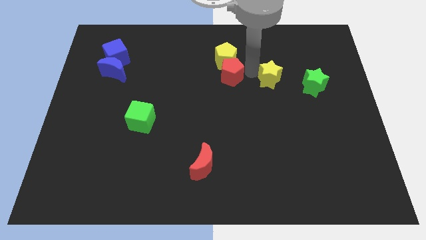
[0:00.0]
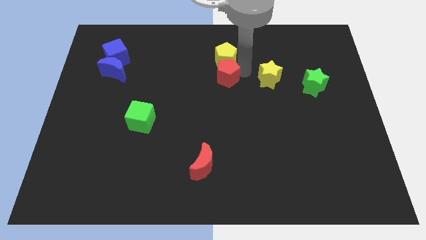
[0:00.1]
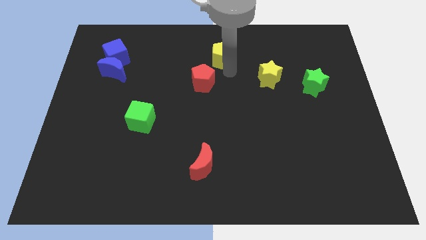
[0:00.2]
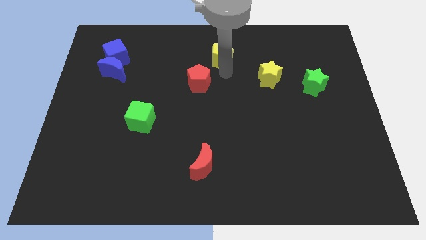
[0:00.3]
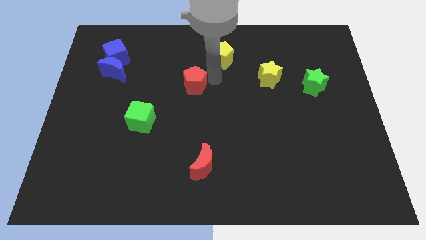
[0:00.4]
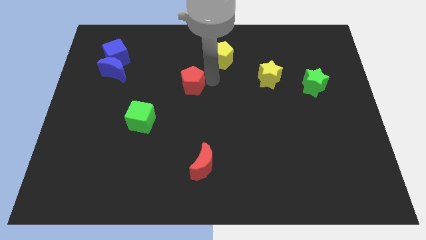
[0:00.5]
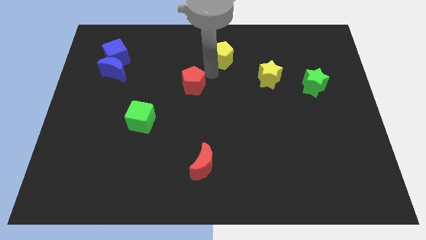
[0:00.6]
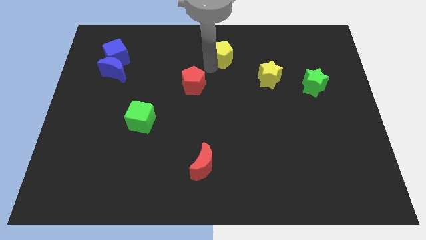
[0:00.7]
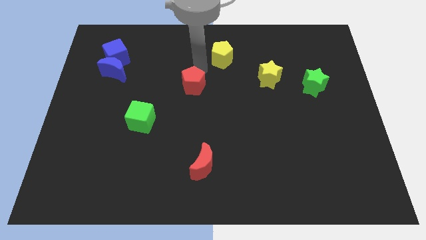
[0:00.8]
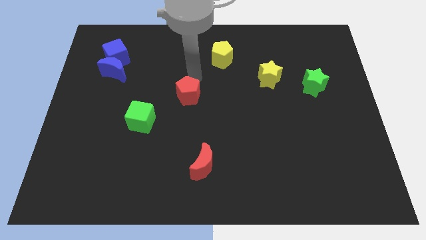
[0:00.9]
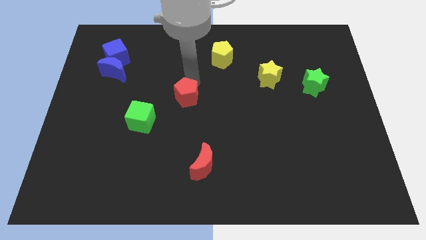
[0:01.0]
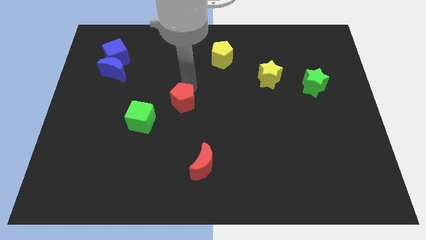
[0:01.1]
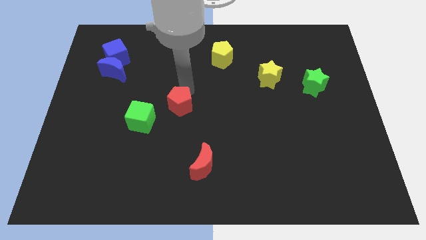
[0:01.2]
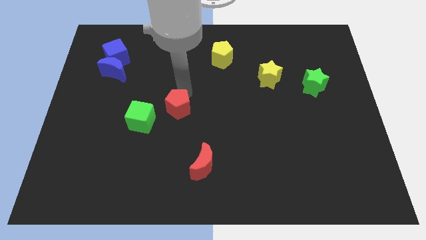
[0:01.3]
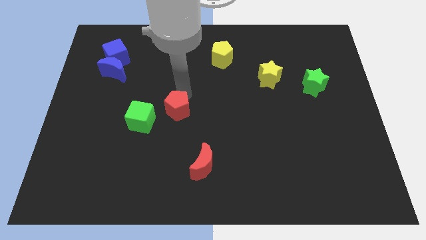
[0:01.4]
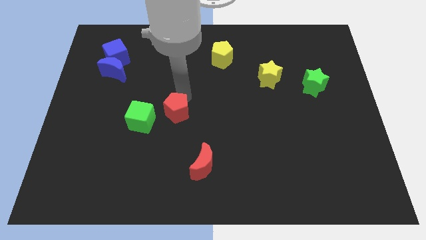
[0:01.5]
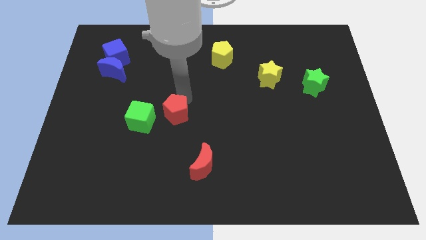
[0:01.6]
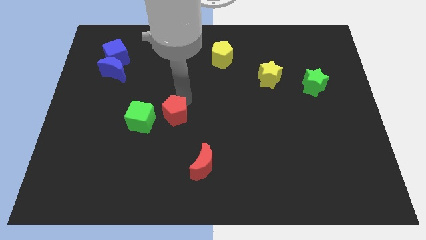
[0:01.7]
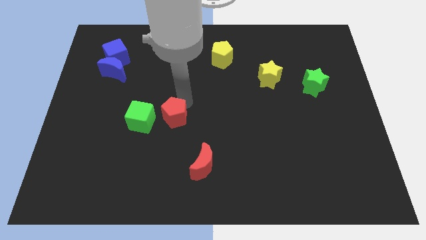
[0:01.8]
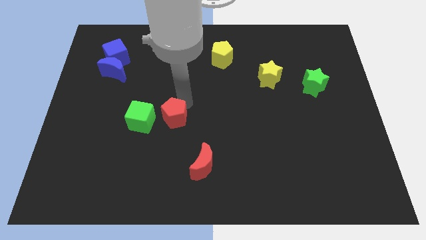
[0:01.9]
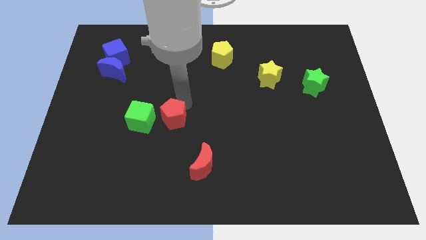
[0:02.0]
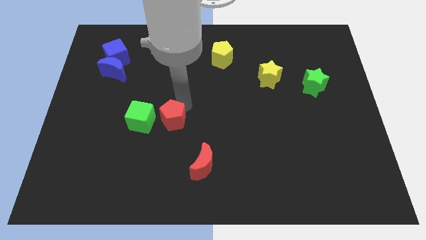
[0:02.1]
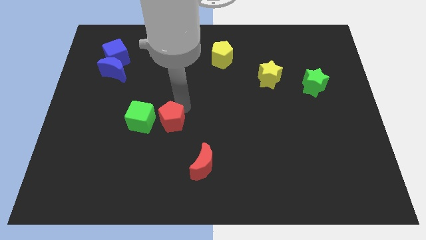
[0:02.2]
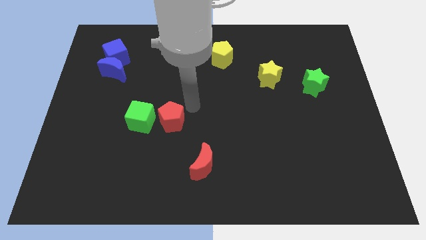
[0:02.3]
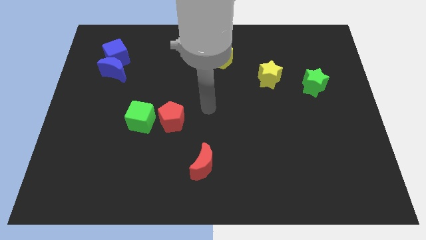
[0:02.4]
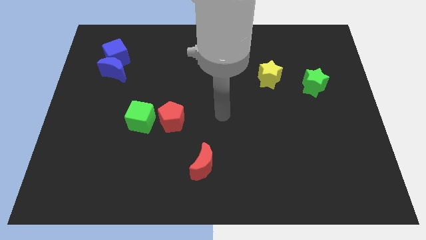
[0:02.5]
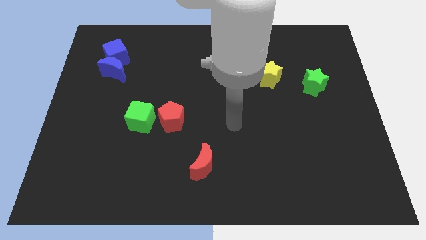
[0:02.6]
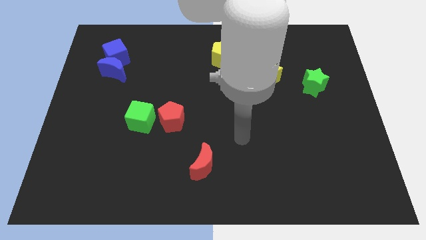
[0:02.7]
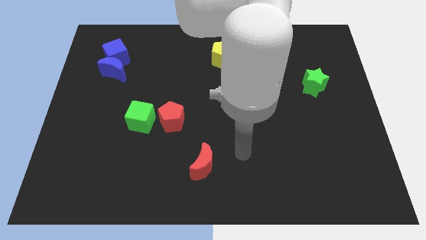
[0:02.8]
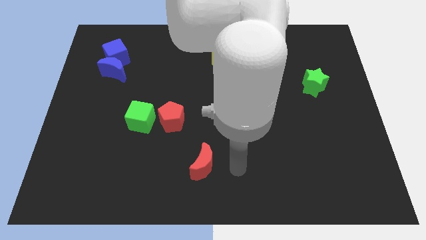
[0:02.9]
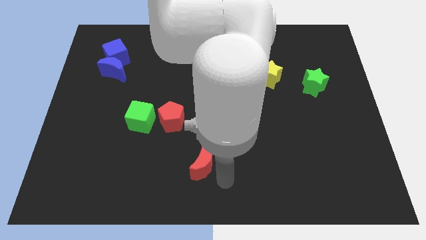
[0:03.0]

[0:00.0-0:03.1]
move the red pentagon to the right side of the green cube

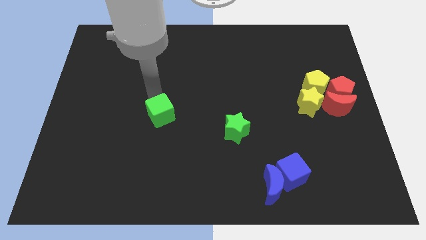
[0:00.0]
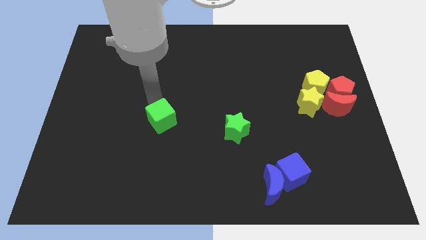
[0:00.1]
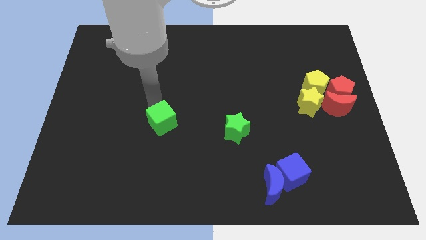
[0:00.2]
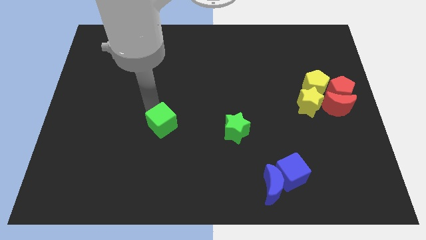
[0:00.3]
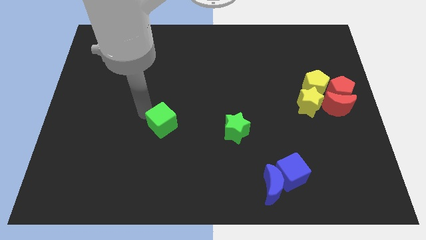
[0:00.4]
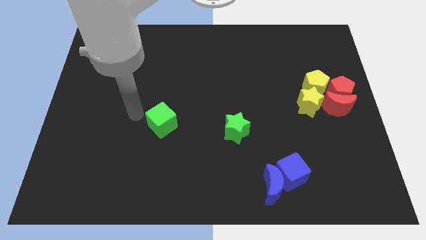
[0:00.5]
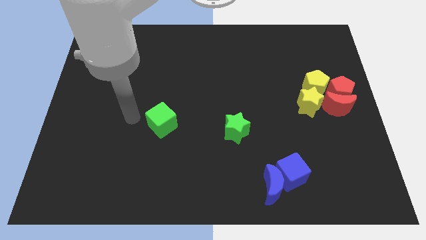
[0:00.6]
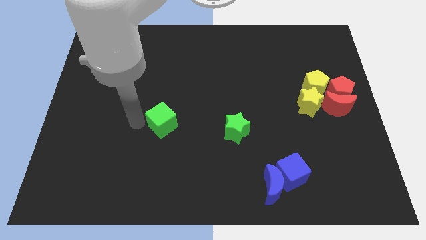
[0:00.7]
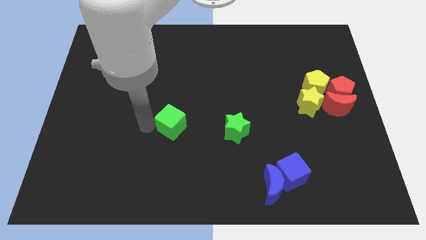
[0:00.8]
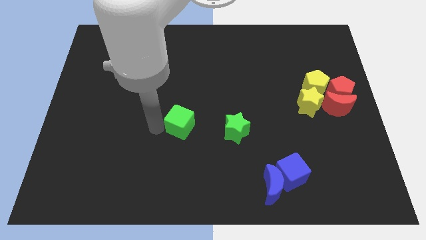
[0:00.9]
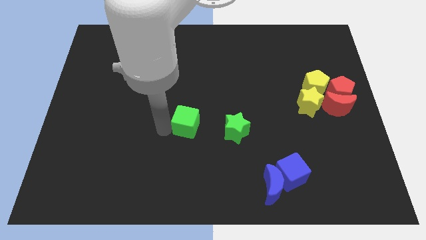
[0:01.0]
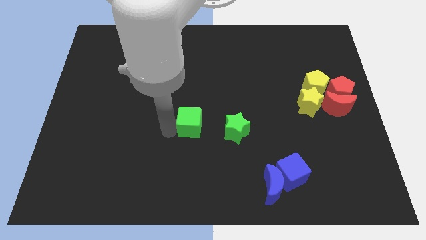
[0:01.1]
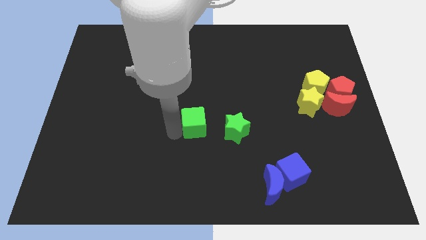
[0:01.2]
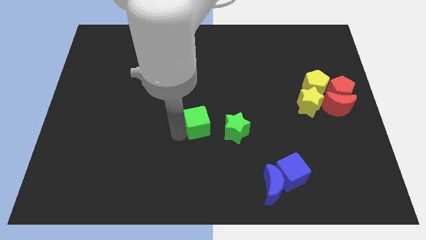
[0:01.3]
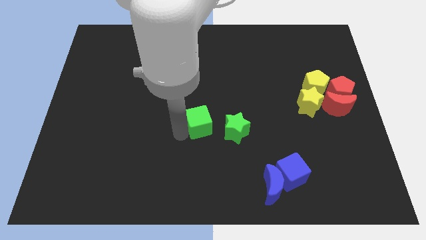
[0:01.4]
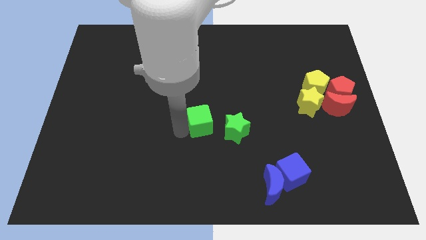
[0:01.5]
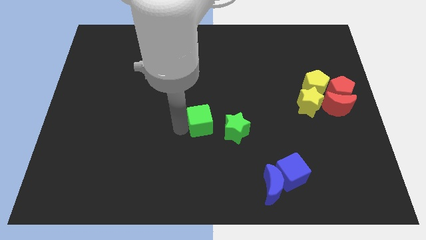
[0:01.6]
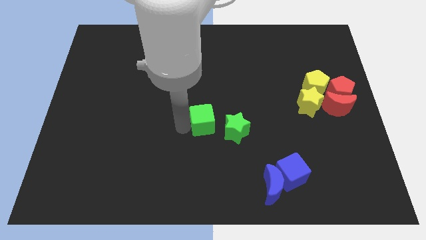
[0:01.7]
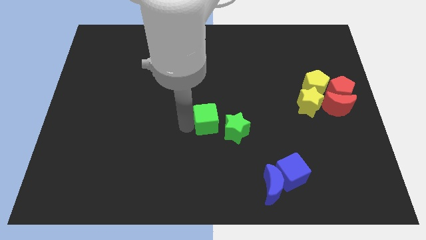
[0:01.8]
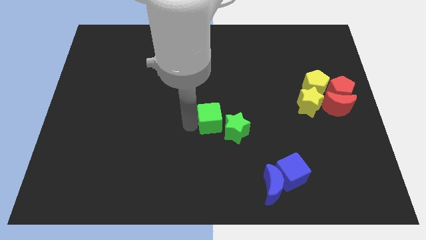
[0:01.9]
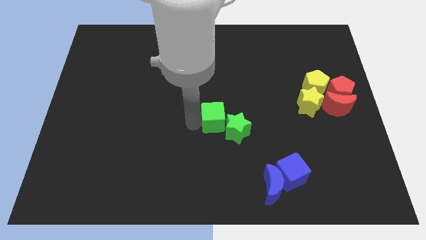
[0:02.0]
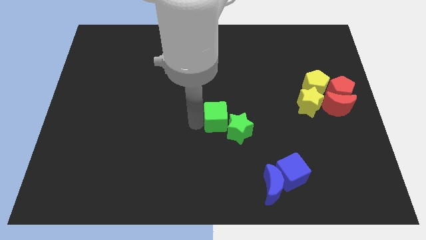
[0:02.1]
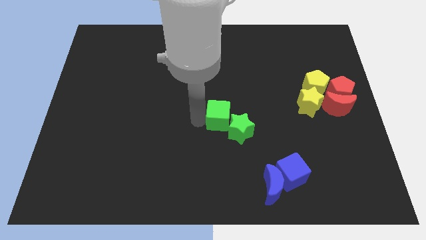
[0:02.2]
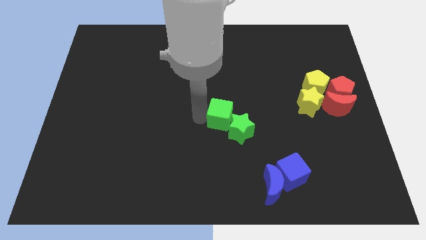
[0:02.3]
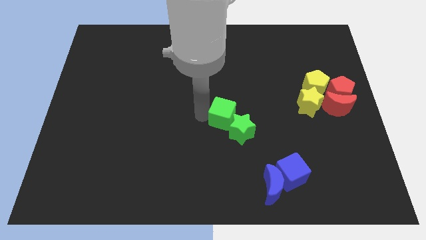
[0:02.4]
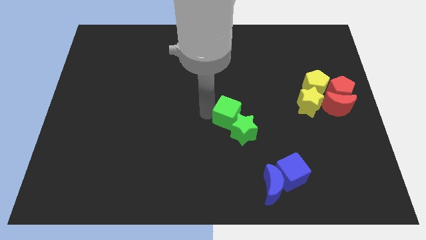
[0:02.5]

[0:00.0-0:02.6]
push green cube towards green star

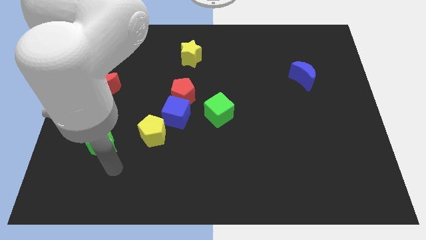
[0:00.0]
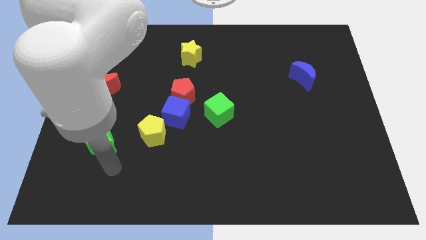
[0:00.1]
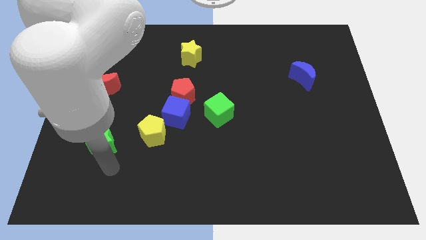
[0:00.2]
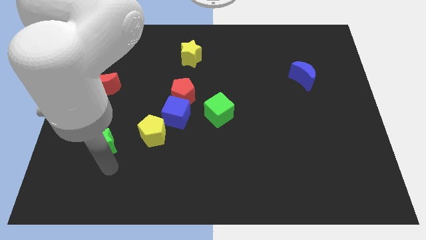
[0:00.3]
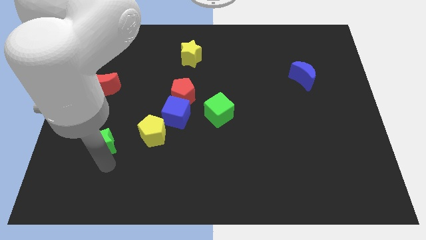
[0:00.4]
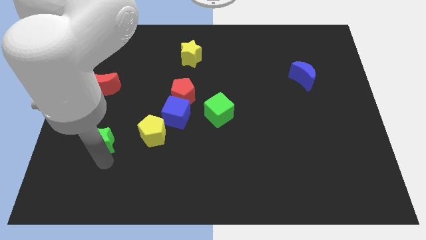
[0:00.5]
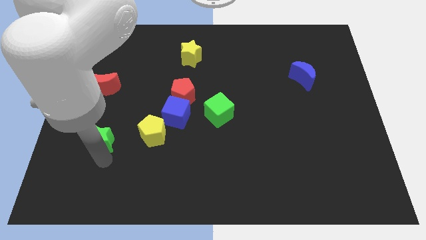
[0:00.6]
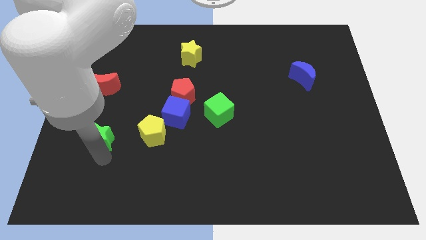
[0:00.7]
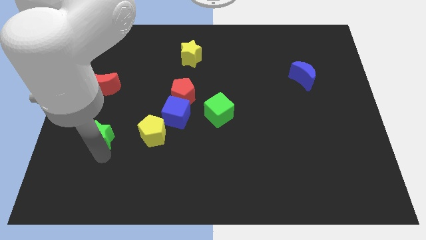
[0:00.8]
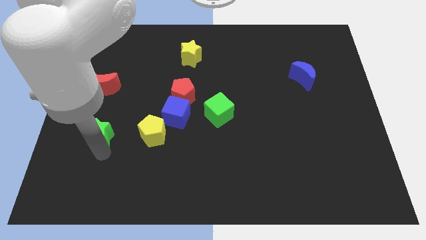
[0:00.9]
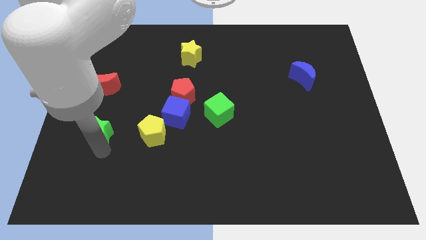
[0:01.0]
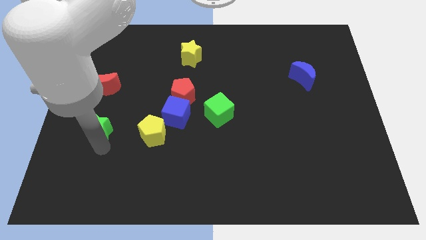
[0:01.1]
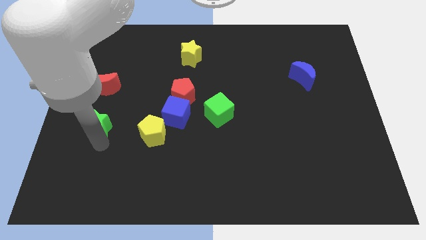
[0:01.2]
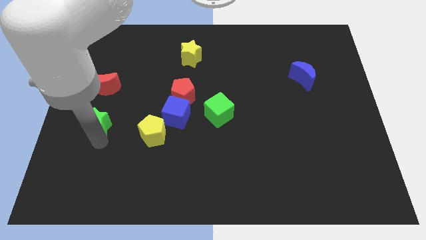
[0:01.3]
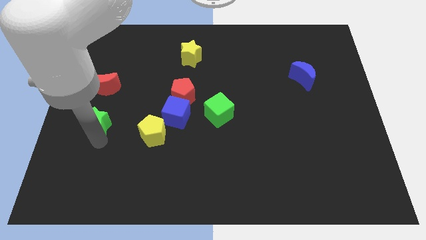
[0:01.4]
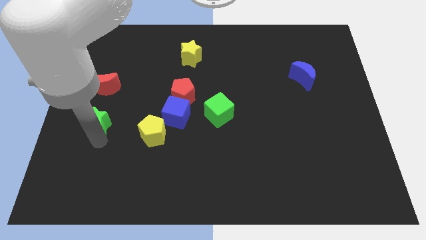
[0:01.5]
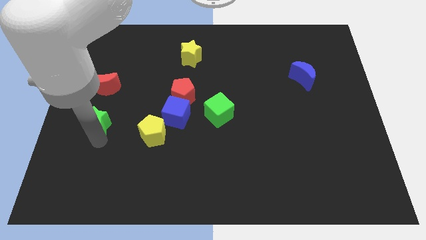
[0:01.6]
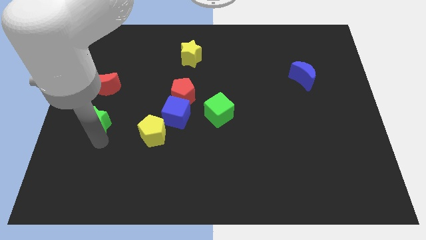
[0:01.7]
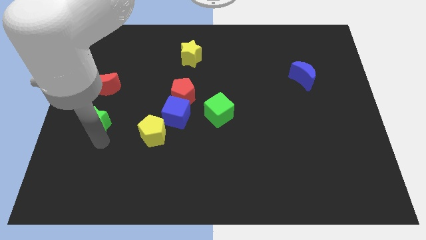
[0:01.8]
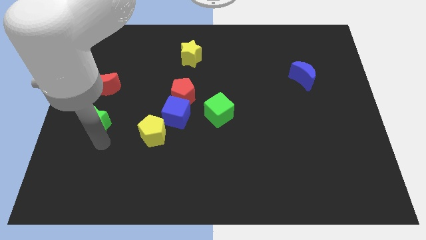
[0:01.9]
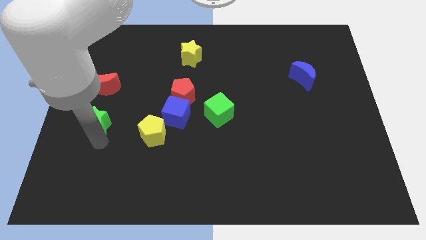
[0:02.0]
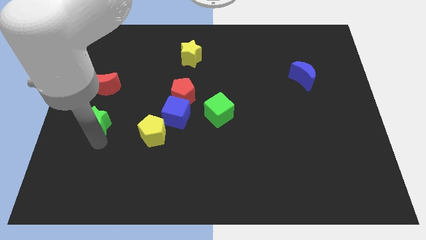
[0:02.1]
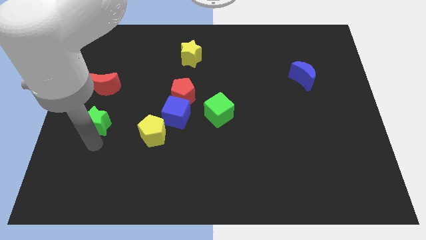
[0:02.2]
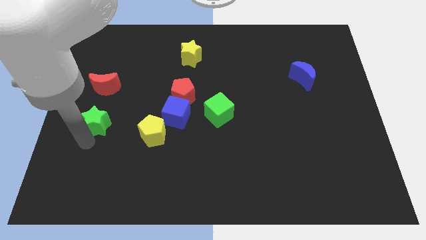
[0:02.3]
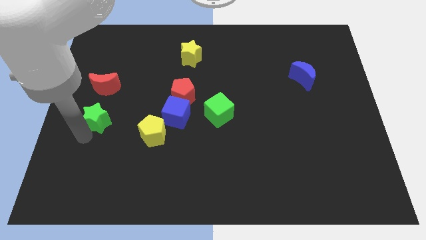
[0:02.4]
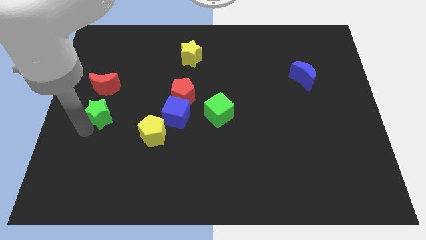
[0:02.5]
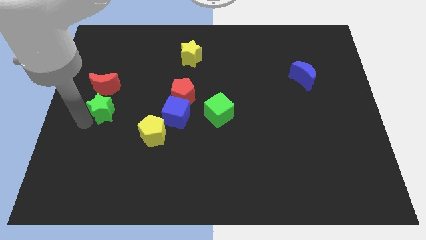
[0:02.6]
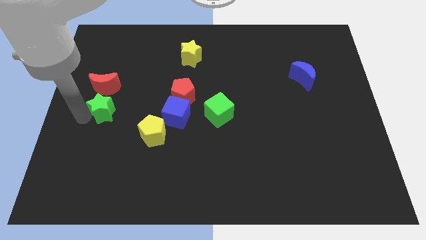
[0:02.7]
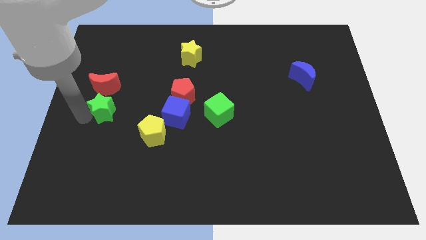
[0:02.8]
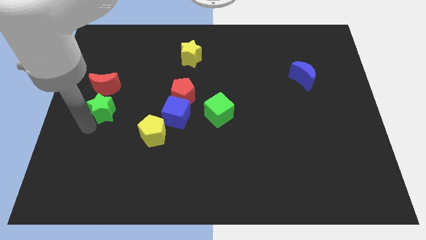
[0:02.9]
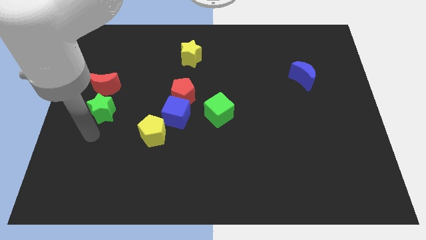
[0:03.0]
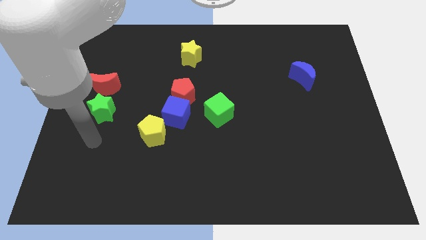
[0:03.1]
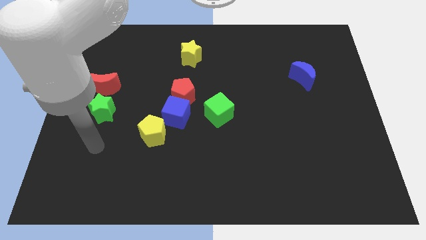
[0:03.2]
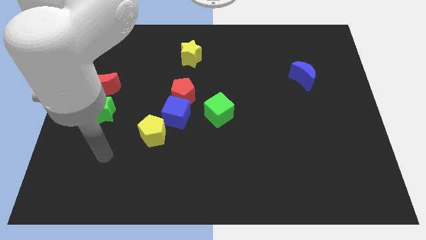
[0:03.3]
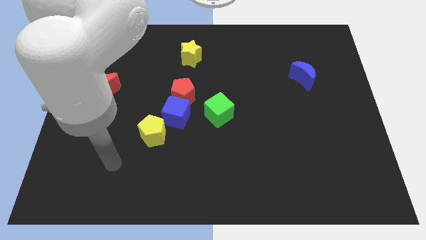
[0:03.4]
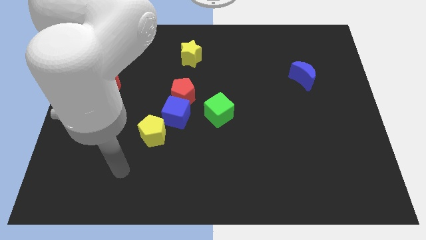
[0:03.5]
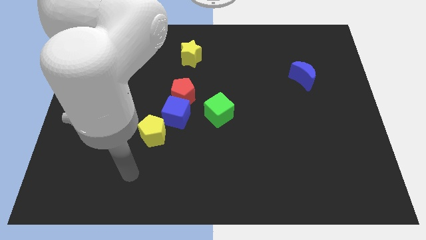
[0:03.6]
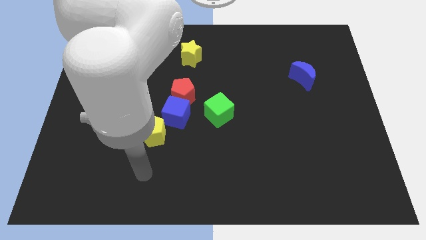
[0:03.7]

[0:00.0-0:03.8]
place the green star below the red moon
